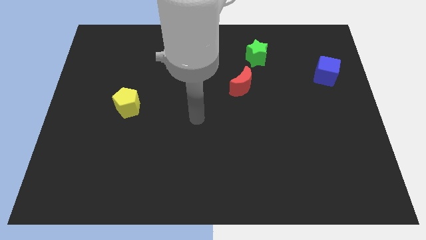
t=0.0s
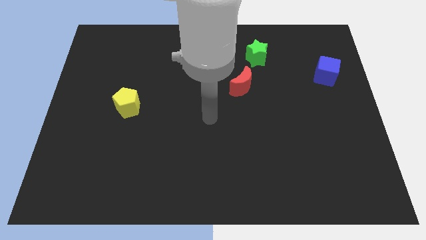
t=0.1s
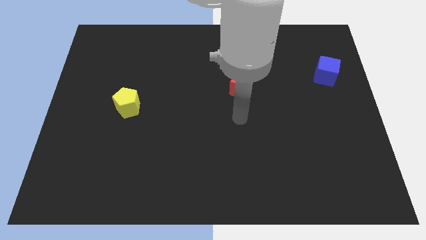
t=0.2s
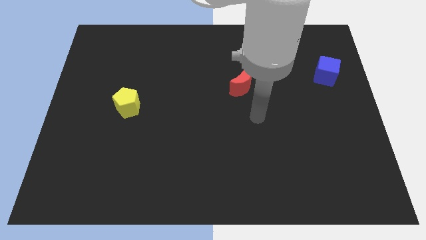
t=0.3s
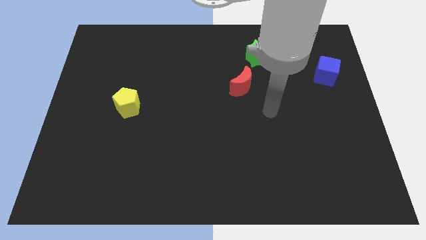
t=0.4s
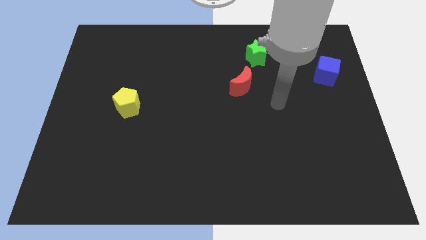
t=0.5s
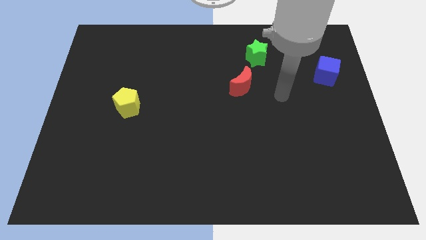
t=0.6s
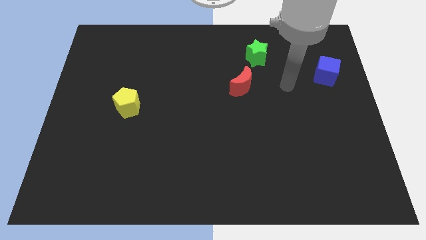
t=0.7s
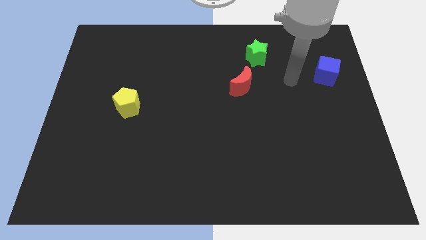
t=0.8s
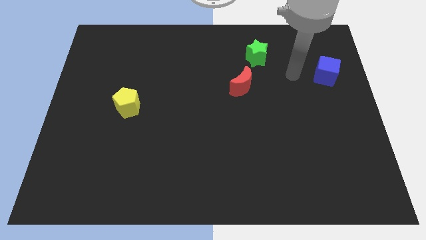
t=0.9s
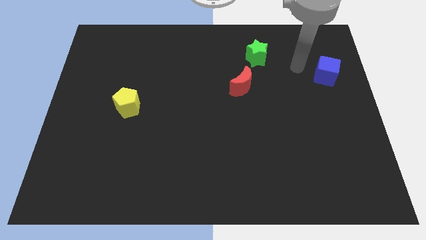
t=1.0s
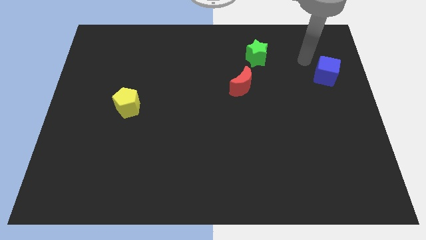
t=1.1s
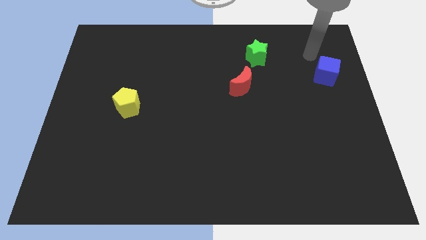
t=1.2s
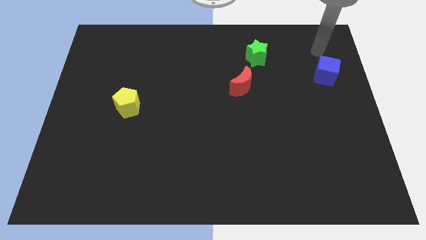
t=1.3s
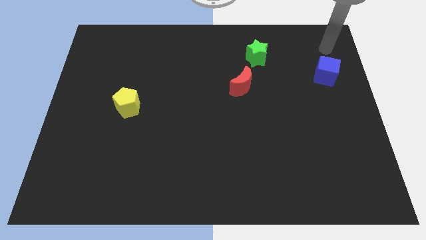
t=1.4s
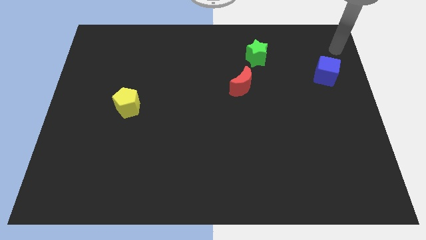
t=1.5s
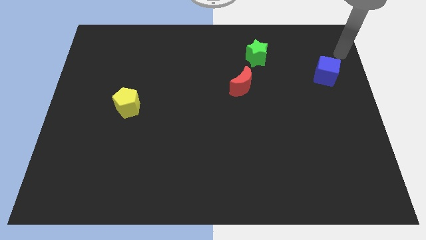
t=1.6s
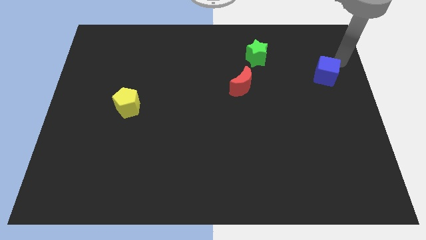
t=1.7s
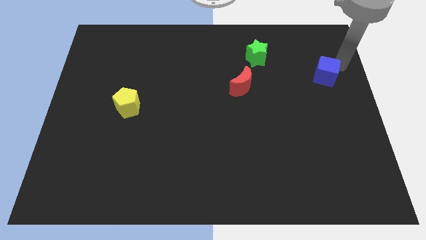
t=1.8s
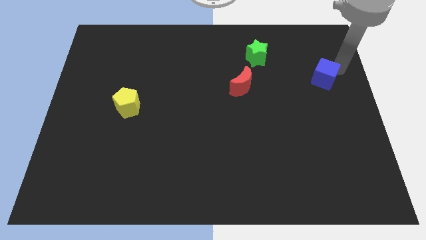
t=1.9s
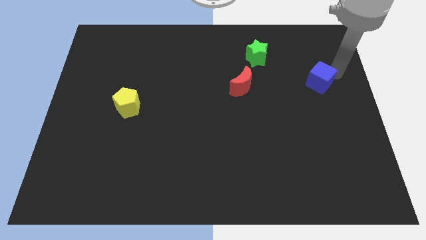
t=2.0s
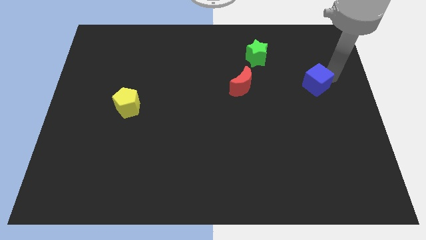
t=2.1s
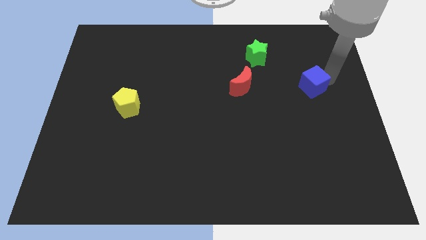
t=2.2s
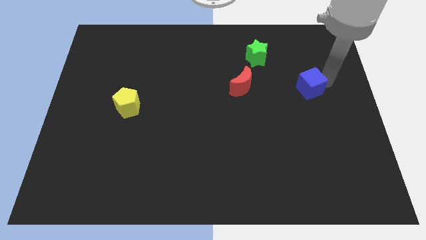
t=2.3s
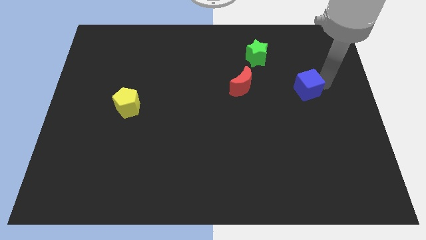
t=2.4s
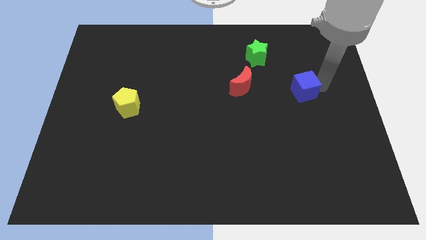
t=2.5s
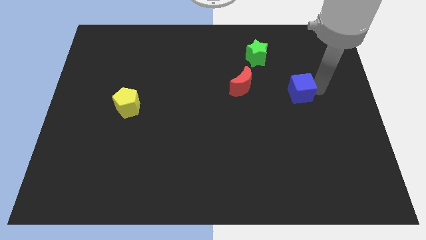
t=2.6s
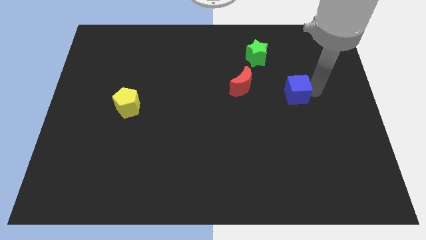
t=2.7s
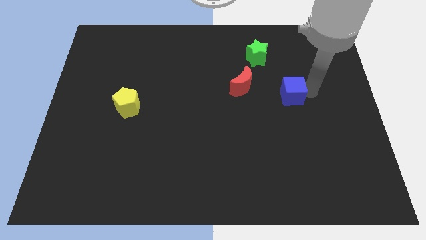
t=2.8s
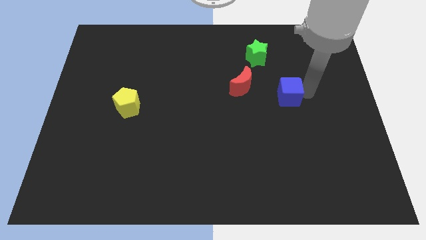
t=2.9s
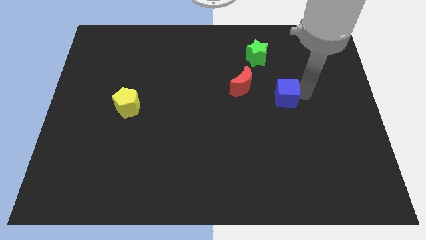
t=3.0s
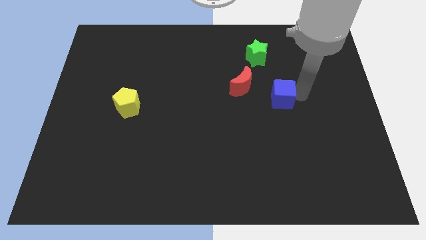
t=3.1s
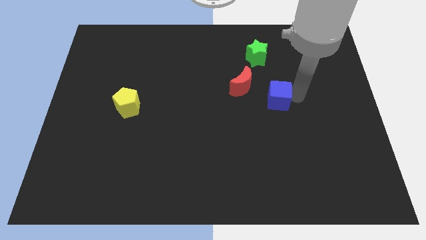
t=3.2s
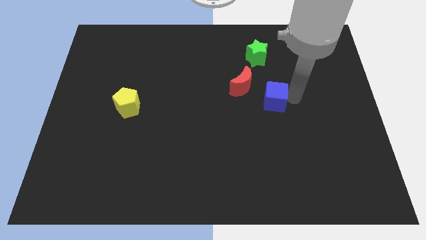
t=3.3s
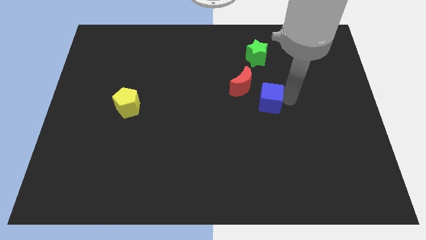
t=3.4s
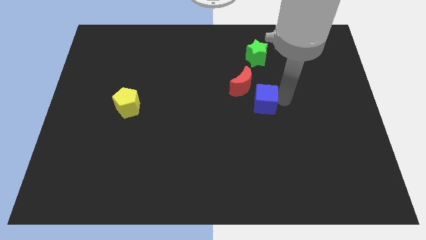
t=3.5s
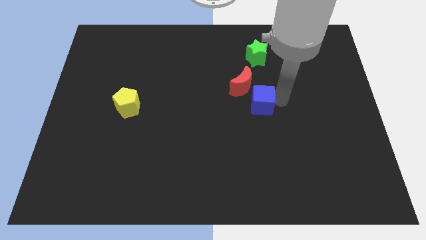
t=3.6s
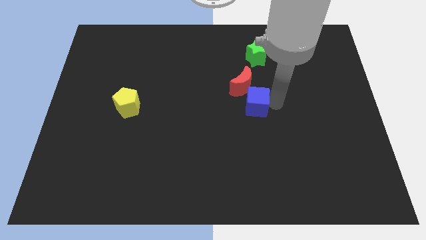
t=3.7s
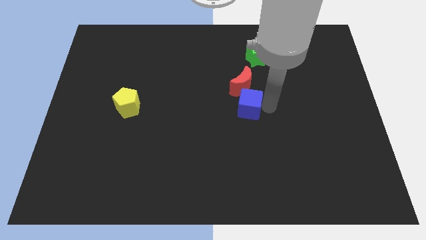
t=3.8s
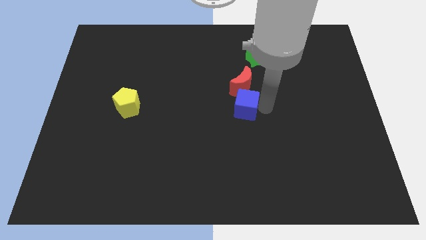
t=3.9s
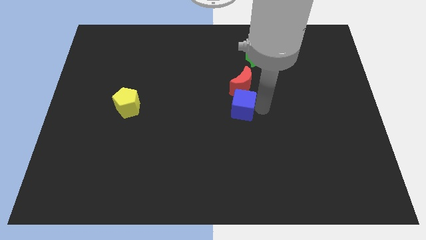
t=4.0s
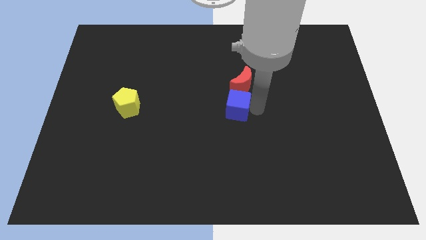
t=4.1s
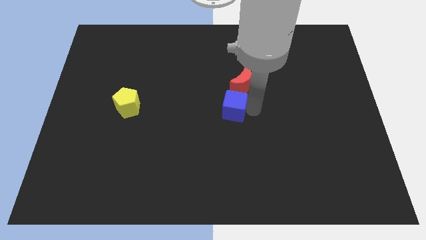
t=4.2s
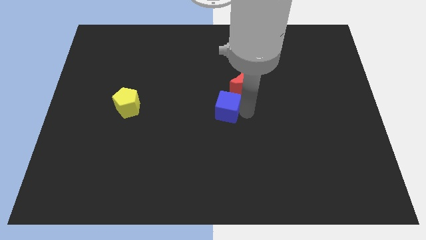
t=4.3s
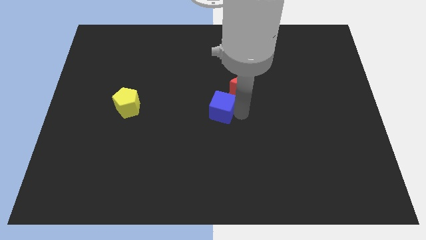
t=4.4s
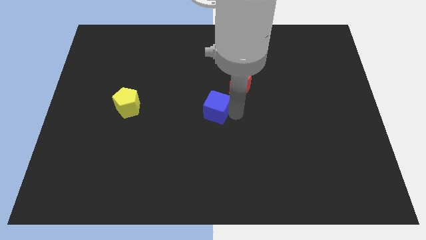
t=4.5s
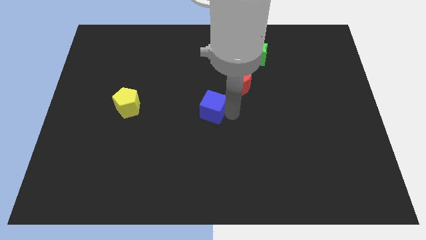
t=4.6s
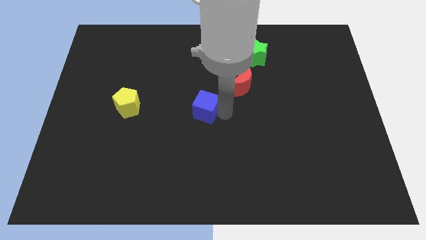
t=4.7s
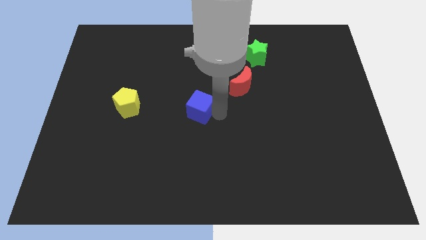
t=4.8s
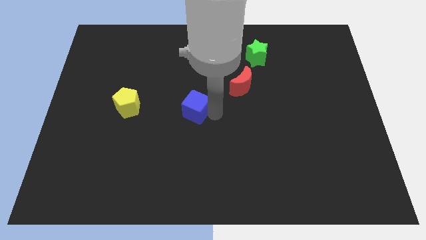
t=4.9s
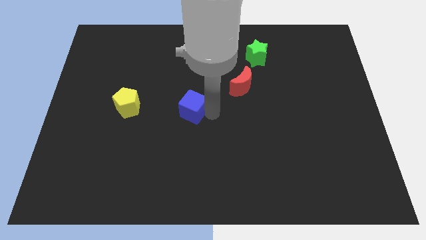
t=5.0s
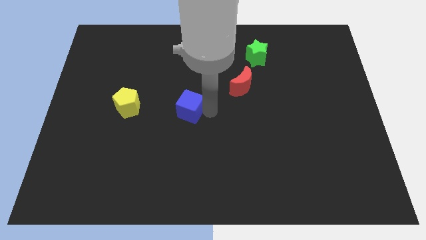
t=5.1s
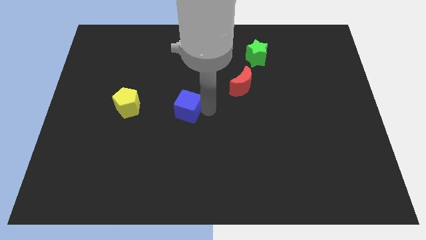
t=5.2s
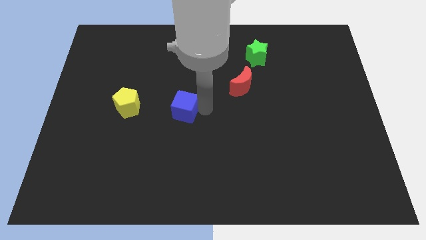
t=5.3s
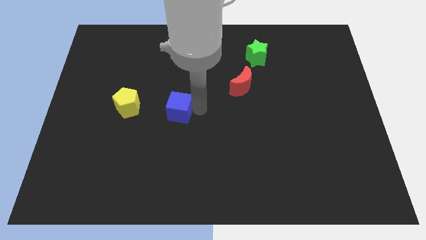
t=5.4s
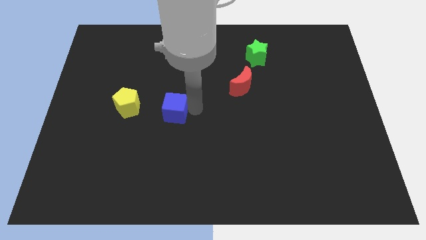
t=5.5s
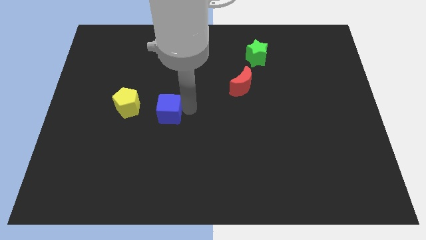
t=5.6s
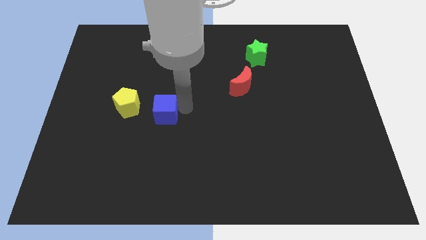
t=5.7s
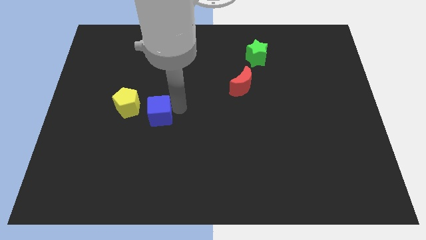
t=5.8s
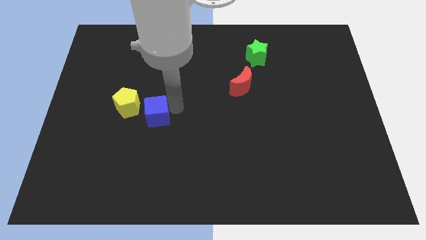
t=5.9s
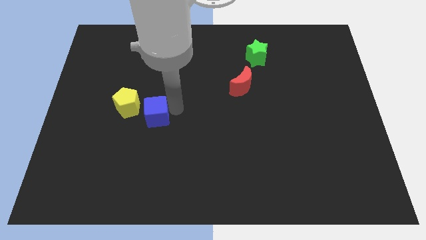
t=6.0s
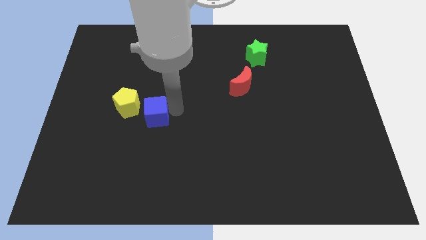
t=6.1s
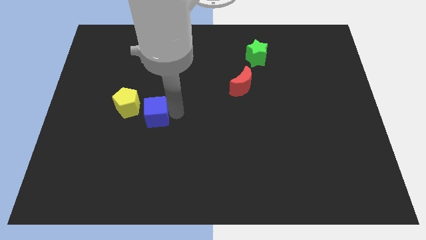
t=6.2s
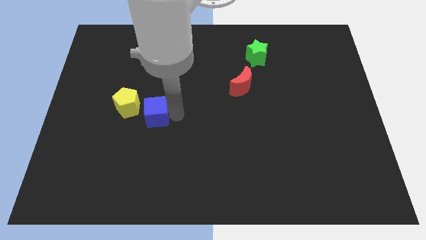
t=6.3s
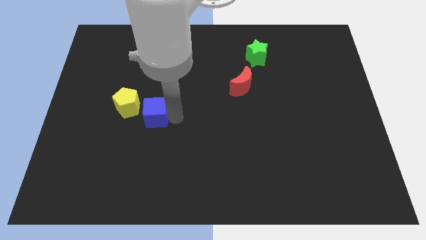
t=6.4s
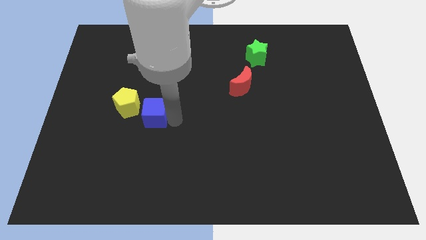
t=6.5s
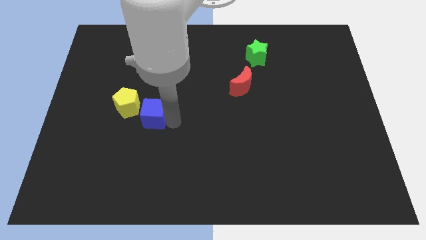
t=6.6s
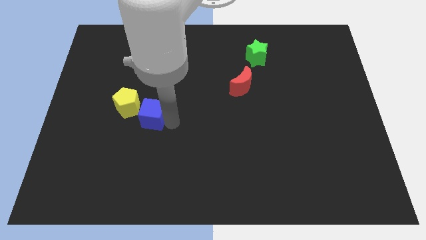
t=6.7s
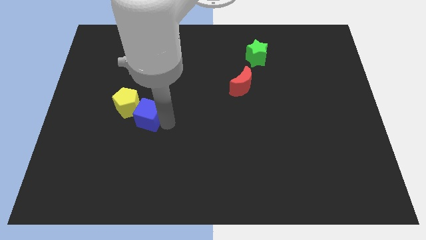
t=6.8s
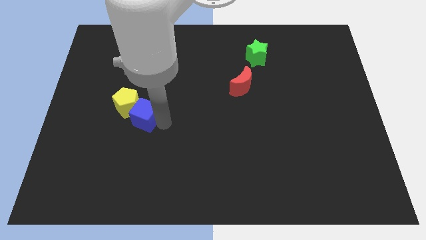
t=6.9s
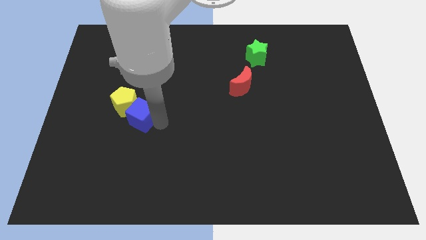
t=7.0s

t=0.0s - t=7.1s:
push the blue block to the yellow pentagon

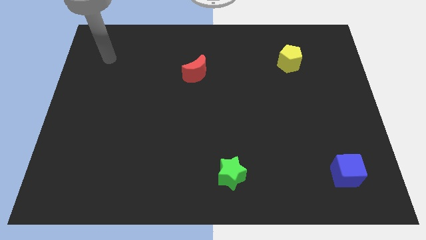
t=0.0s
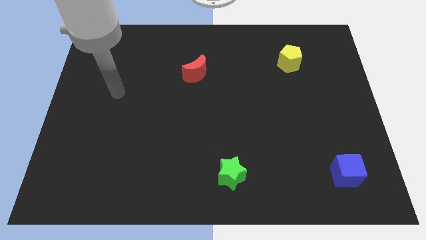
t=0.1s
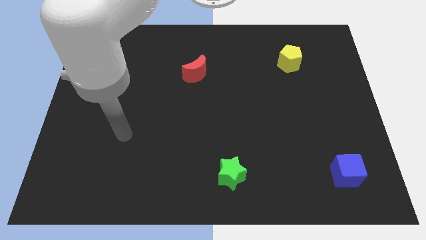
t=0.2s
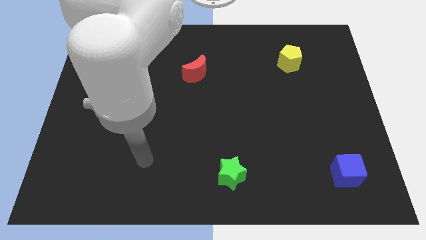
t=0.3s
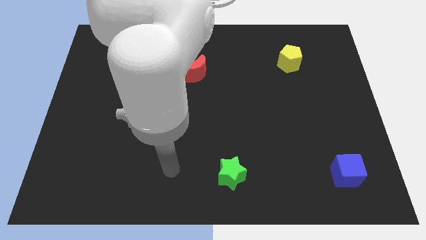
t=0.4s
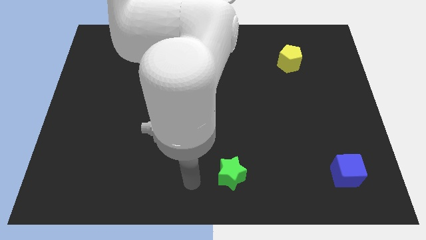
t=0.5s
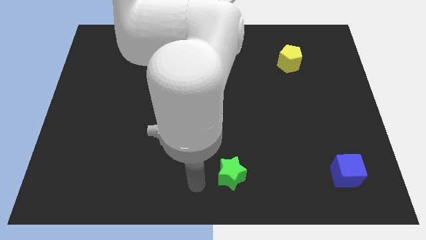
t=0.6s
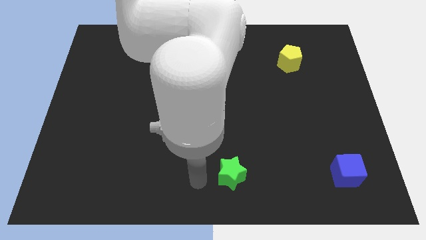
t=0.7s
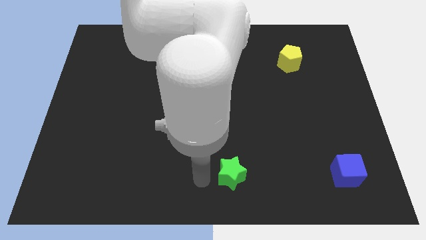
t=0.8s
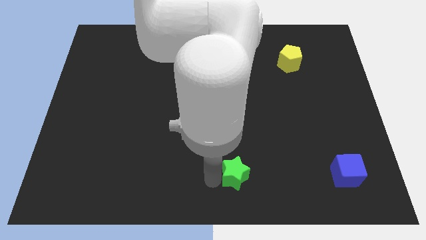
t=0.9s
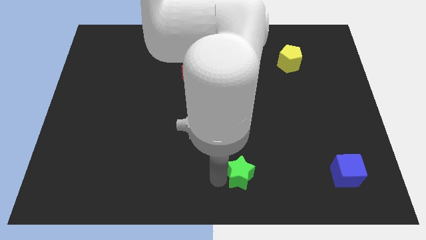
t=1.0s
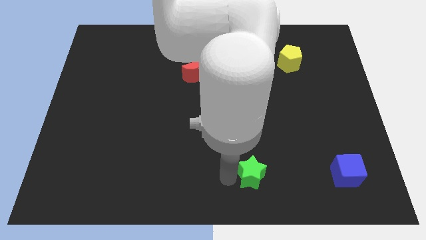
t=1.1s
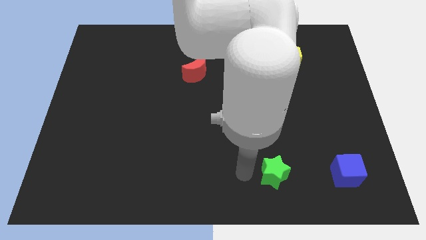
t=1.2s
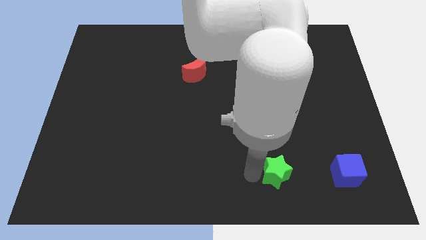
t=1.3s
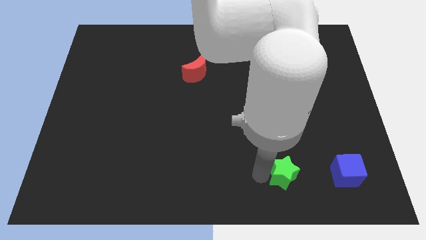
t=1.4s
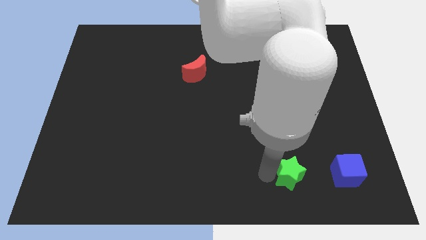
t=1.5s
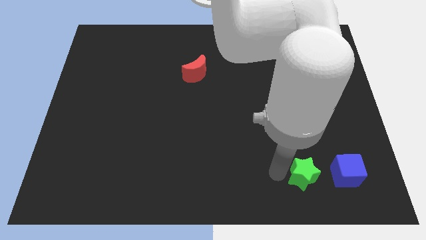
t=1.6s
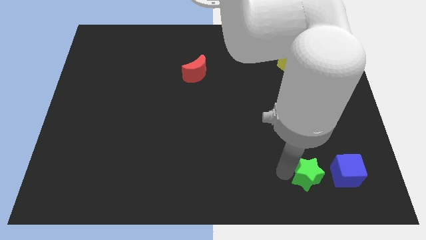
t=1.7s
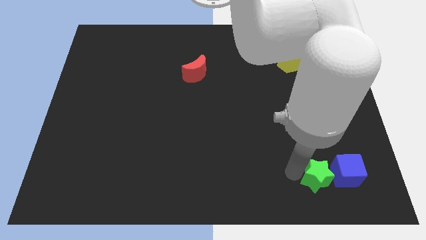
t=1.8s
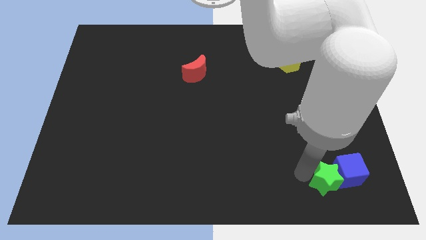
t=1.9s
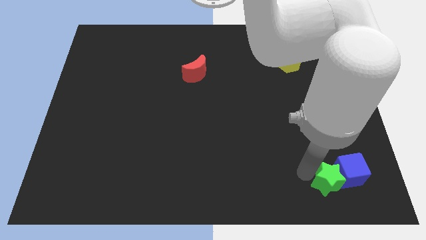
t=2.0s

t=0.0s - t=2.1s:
put the star to the blue block
